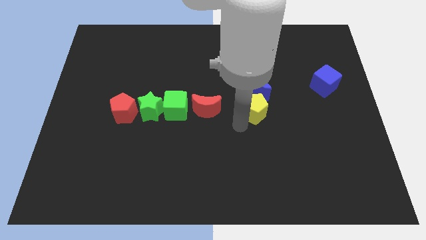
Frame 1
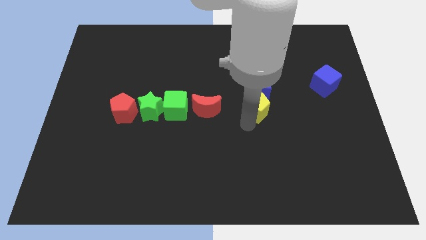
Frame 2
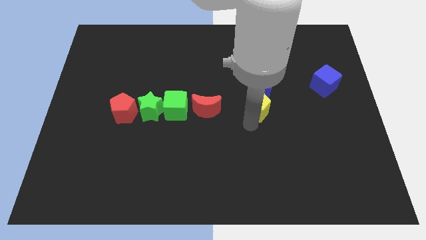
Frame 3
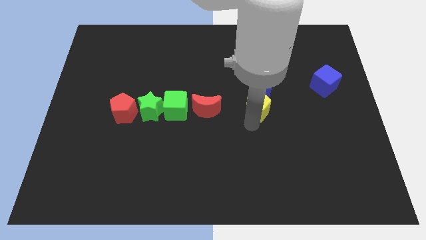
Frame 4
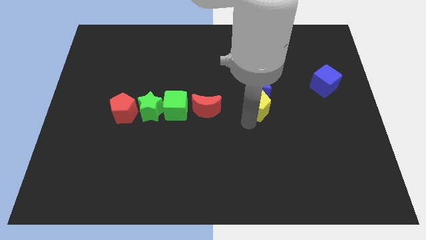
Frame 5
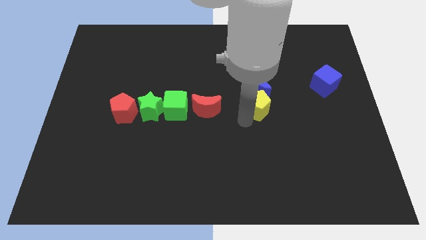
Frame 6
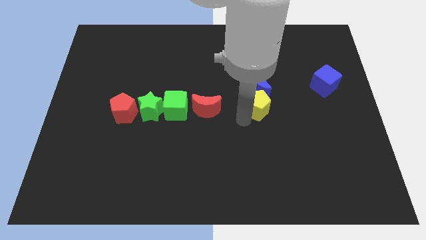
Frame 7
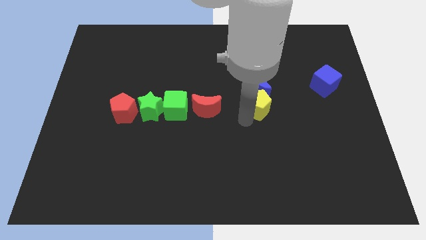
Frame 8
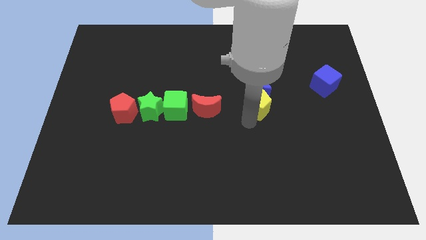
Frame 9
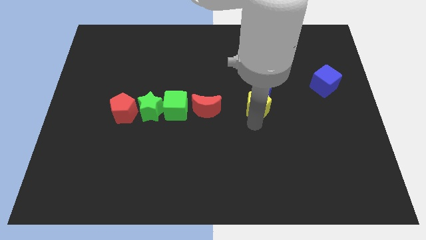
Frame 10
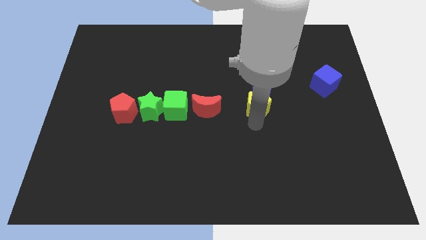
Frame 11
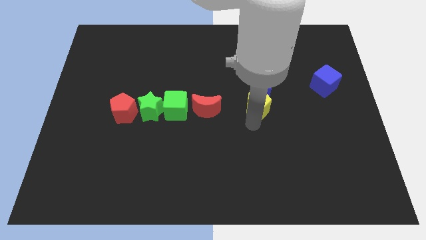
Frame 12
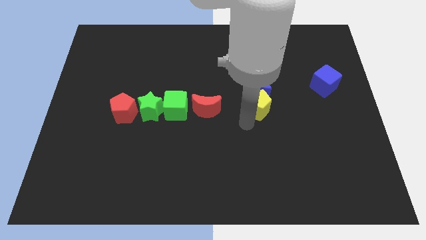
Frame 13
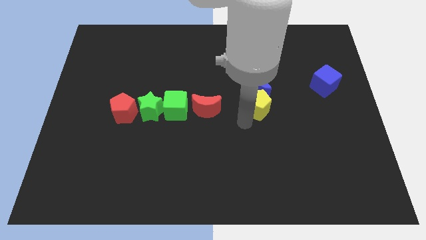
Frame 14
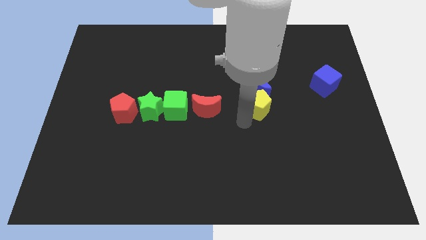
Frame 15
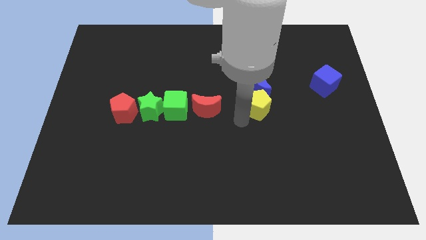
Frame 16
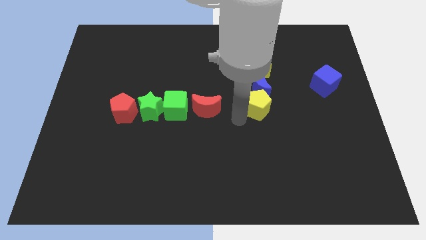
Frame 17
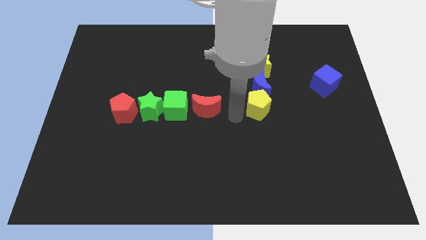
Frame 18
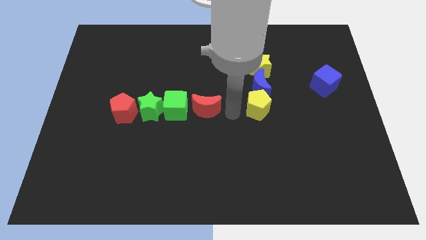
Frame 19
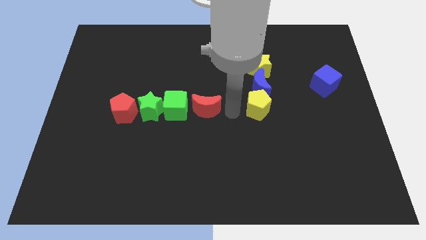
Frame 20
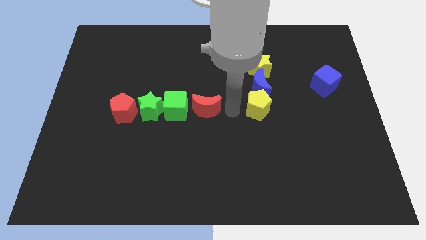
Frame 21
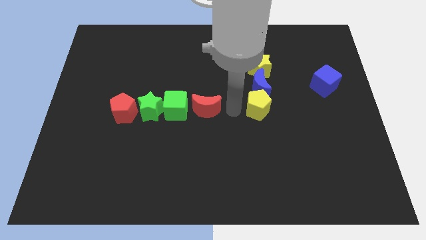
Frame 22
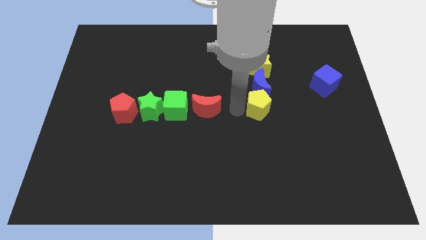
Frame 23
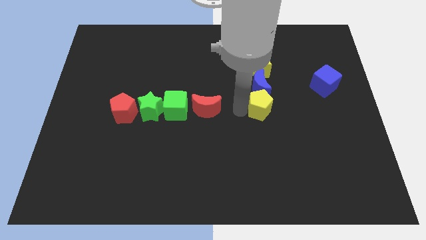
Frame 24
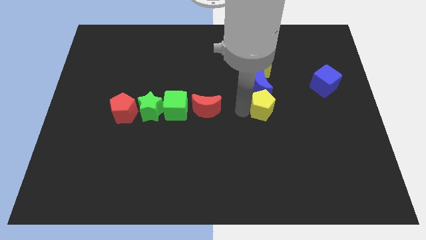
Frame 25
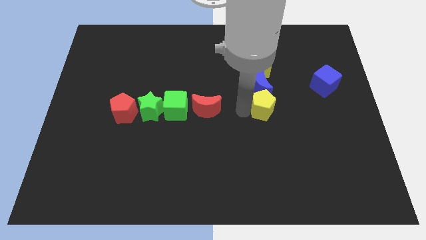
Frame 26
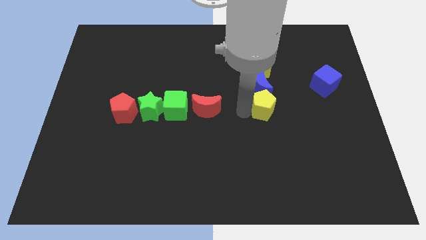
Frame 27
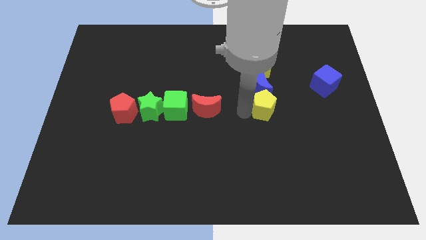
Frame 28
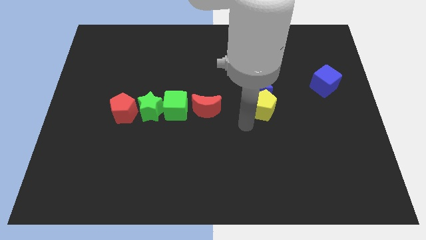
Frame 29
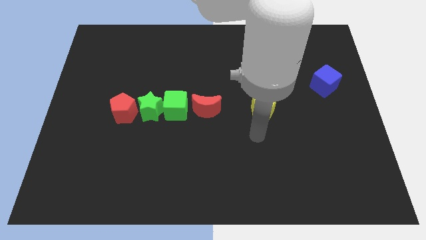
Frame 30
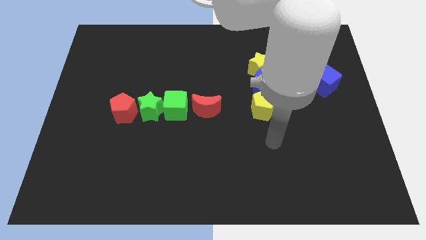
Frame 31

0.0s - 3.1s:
move yellow pentagon close to blue moon

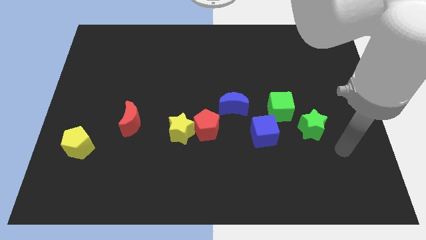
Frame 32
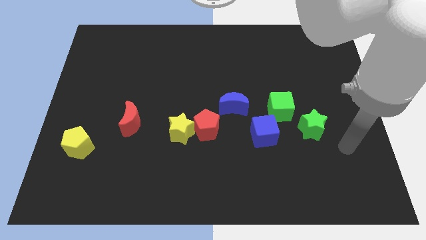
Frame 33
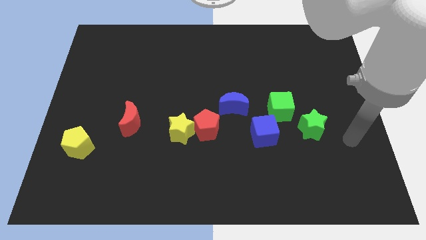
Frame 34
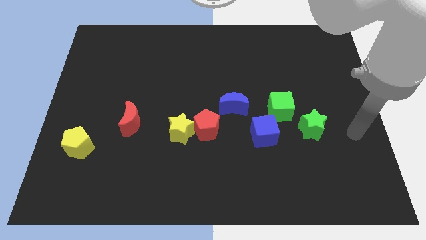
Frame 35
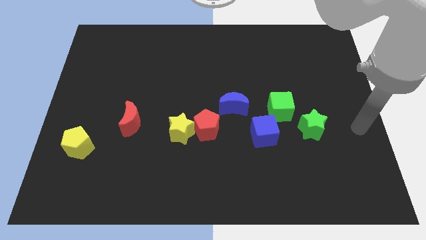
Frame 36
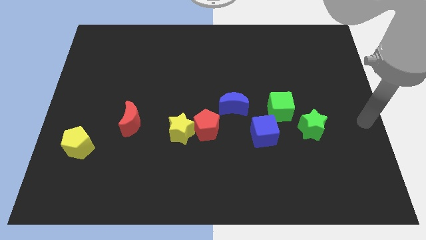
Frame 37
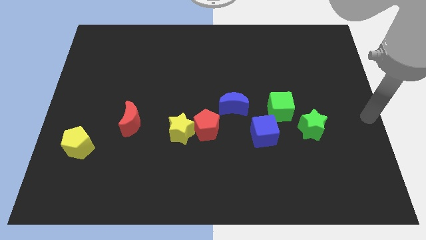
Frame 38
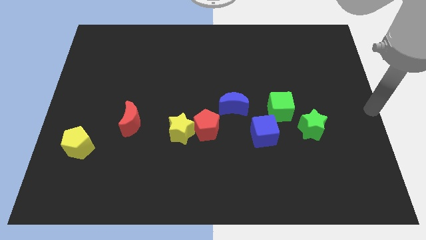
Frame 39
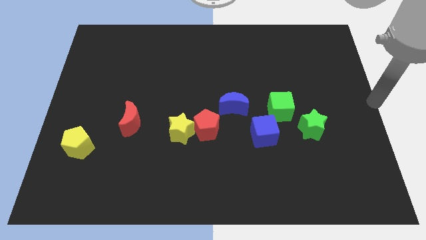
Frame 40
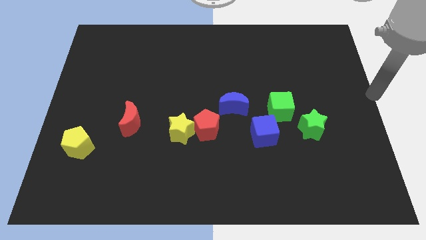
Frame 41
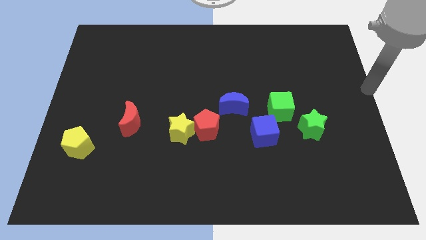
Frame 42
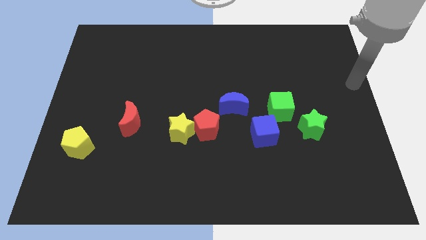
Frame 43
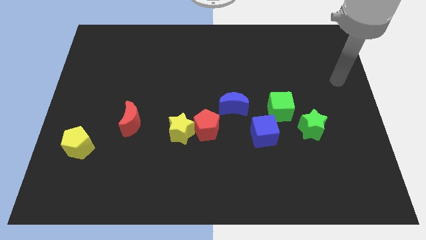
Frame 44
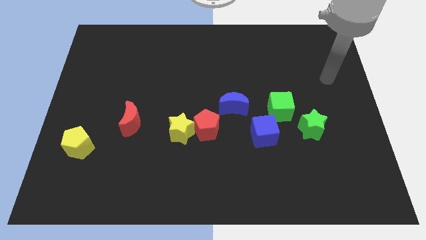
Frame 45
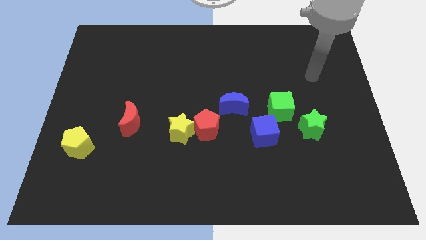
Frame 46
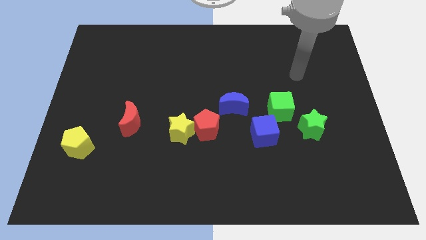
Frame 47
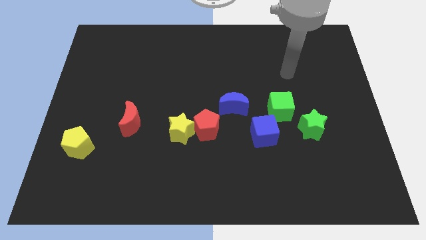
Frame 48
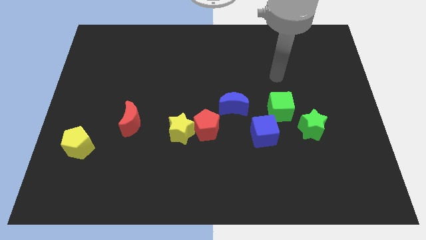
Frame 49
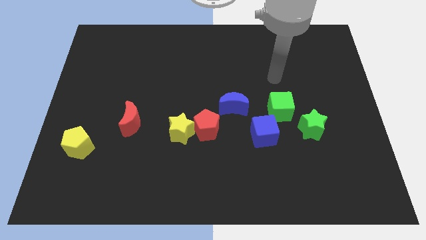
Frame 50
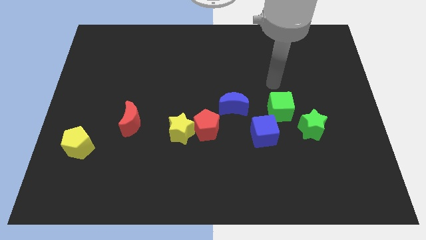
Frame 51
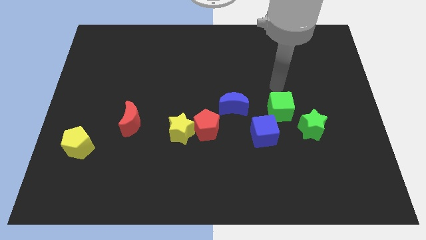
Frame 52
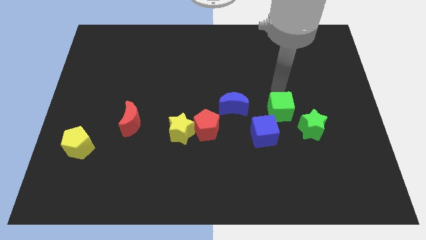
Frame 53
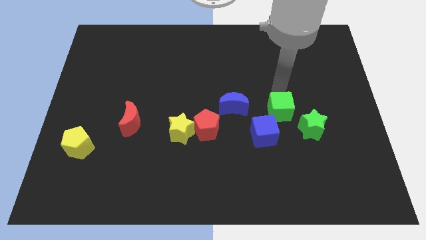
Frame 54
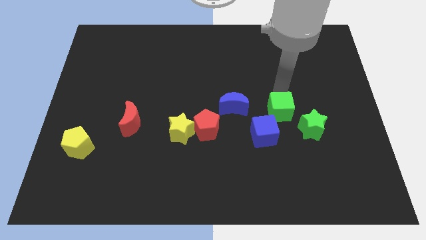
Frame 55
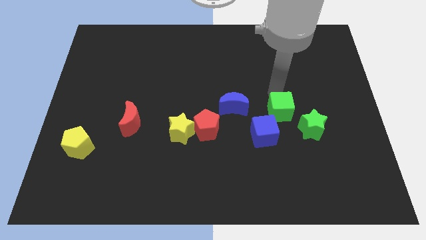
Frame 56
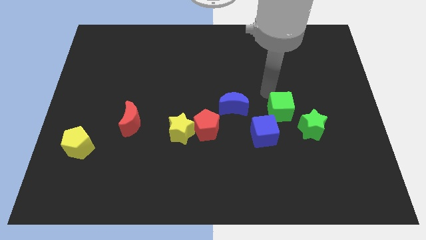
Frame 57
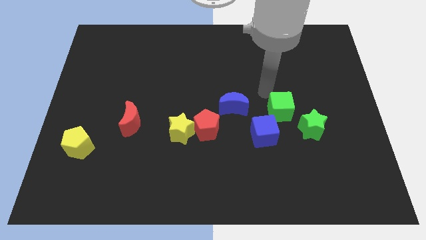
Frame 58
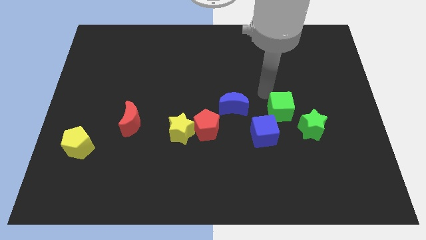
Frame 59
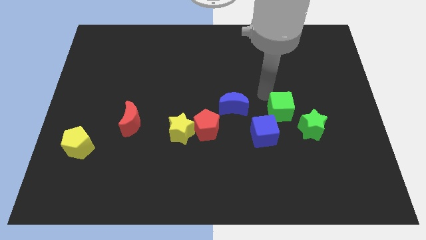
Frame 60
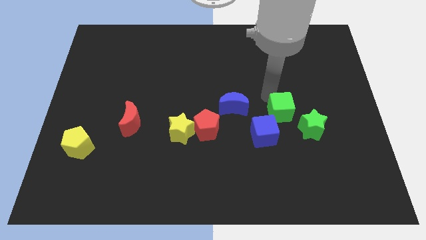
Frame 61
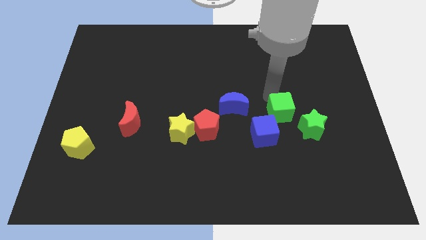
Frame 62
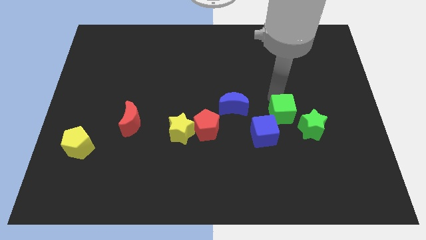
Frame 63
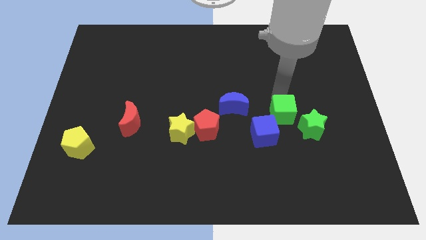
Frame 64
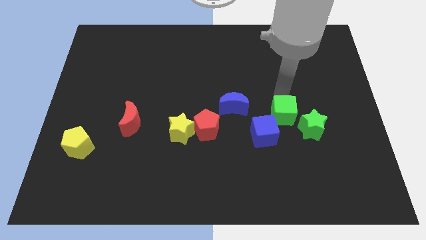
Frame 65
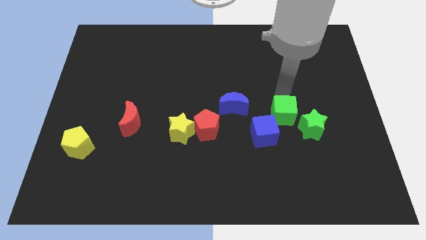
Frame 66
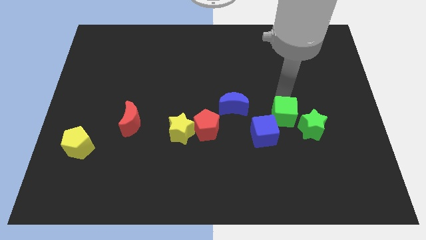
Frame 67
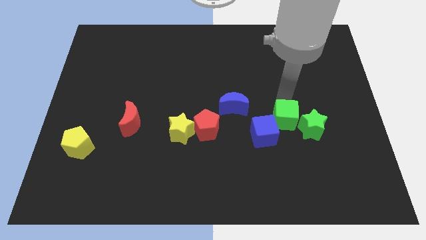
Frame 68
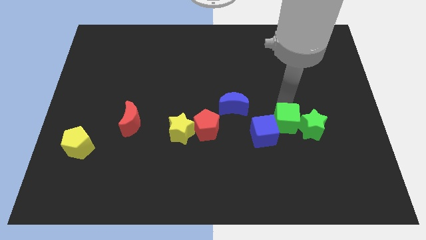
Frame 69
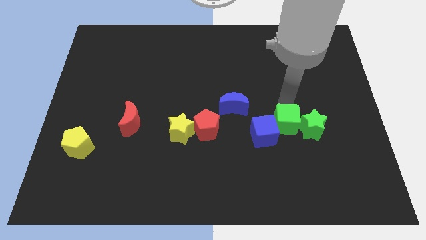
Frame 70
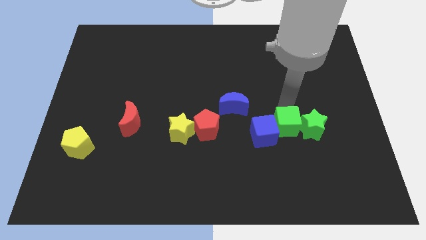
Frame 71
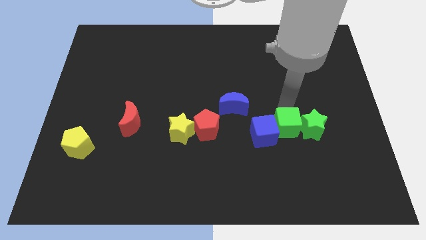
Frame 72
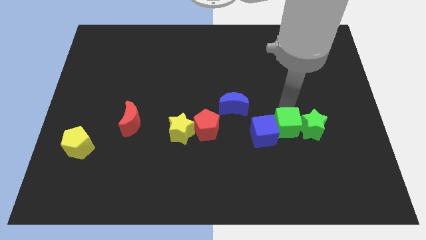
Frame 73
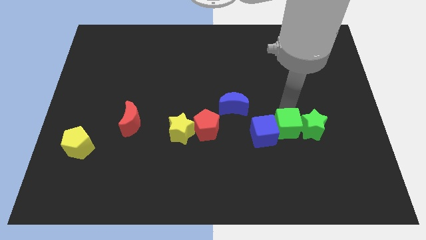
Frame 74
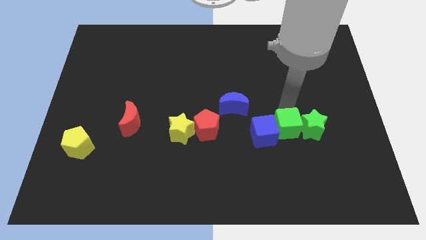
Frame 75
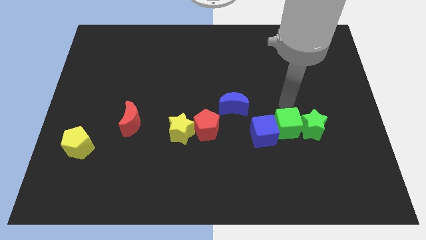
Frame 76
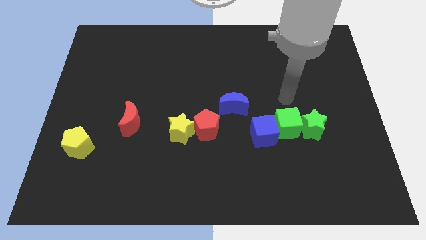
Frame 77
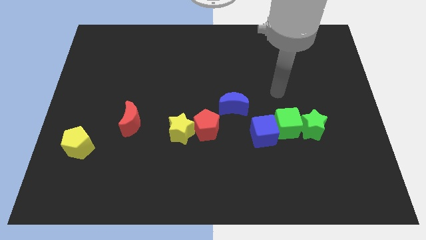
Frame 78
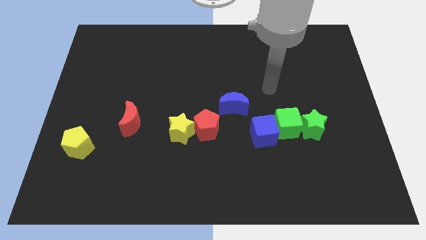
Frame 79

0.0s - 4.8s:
slide the green cube in between the green star and blue cube

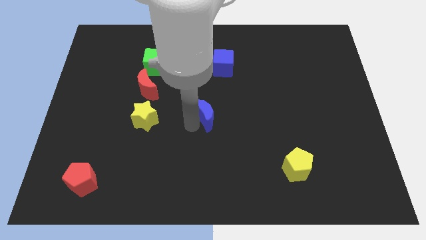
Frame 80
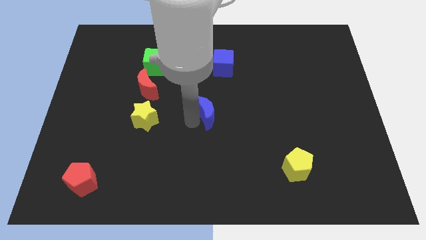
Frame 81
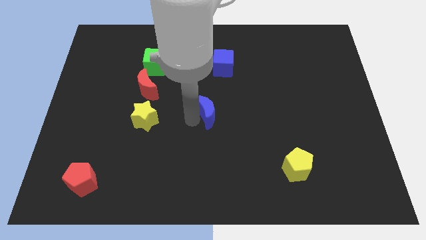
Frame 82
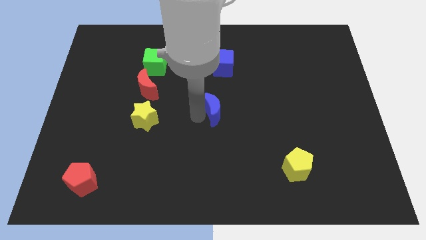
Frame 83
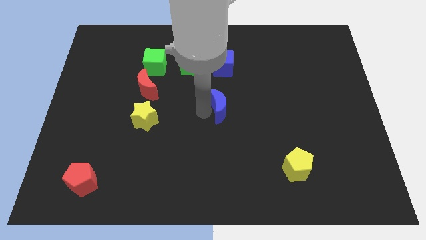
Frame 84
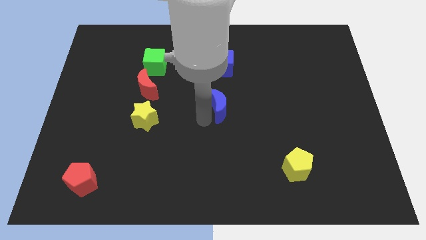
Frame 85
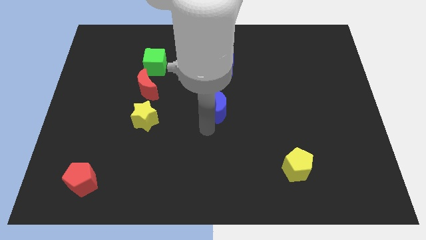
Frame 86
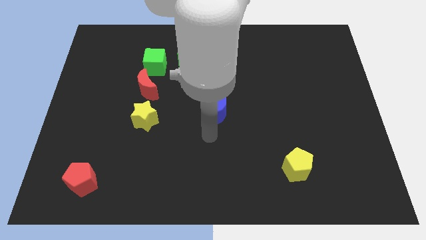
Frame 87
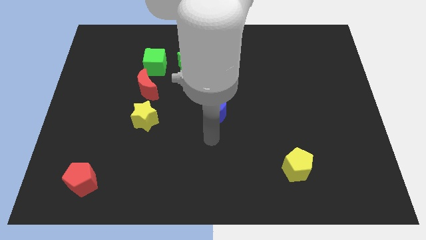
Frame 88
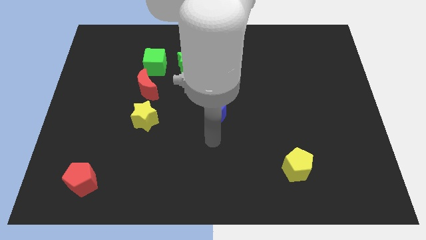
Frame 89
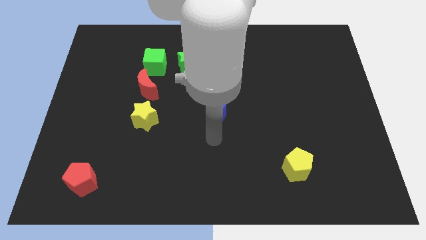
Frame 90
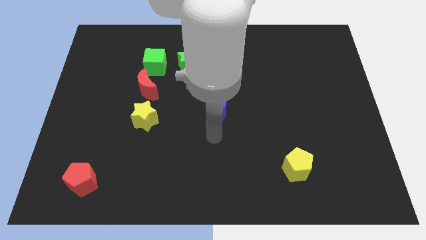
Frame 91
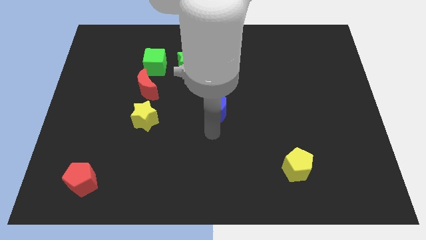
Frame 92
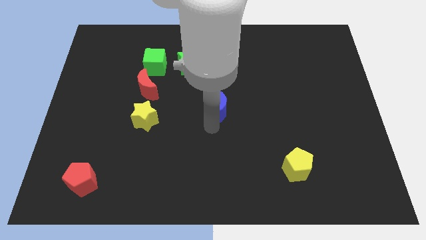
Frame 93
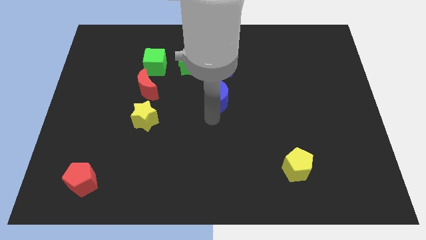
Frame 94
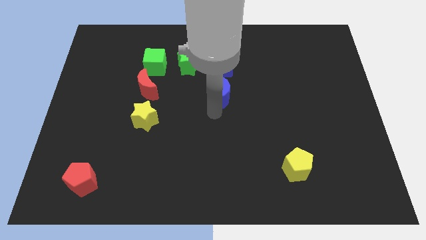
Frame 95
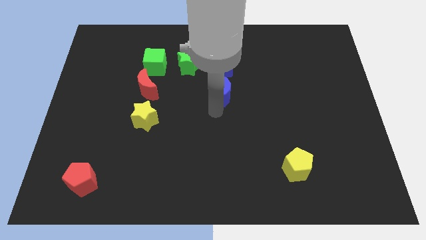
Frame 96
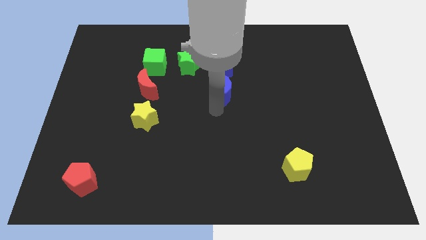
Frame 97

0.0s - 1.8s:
place the blue moon below the blue cube
